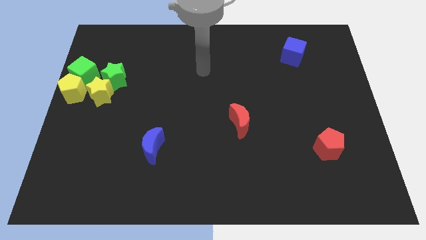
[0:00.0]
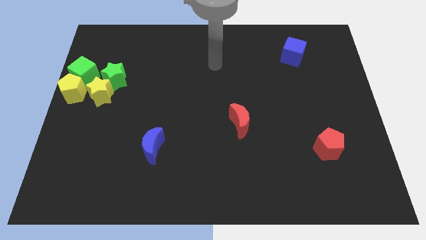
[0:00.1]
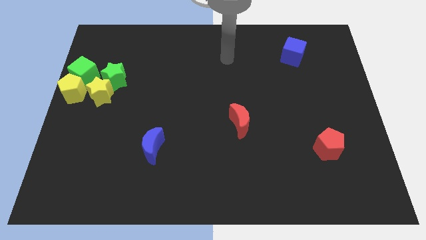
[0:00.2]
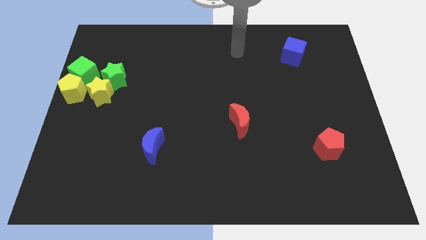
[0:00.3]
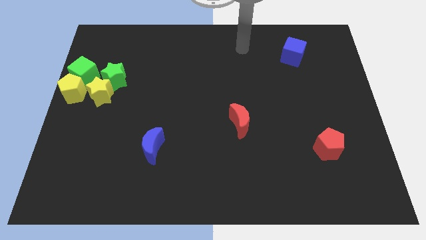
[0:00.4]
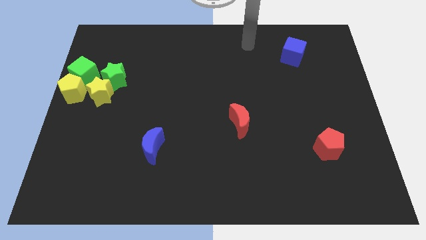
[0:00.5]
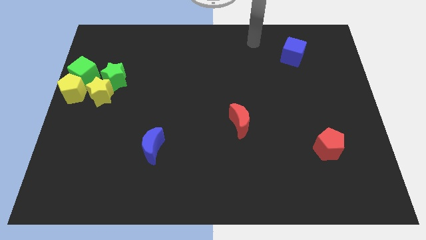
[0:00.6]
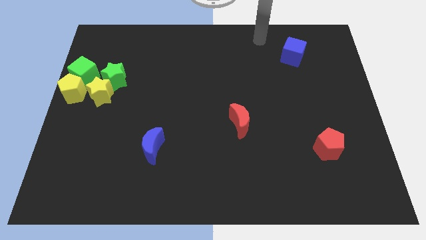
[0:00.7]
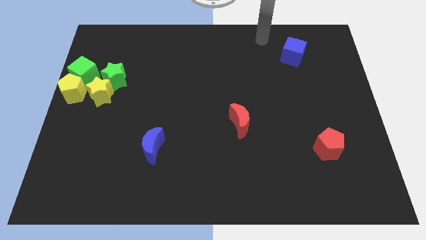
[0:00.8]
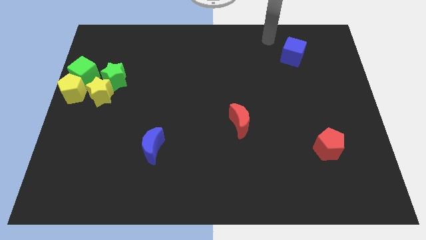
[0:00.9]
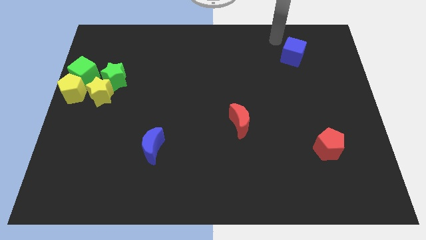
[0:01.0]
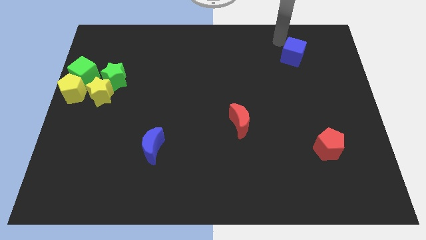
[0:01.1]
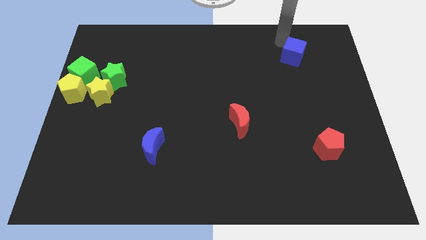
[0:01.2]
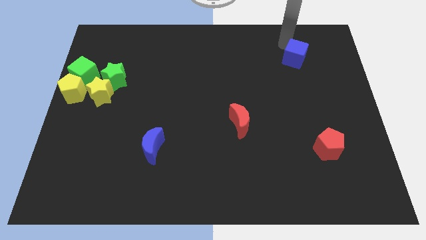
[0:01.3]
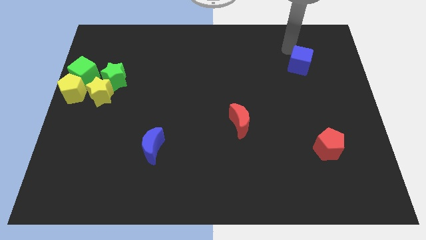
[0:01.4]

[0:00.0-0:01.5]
tab the top side of the blue cube

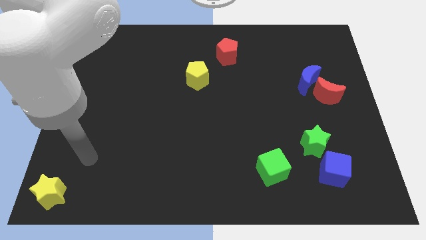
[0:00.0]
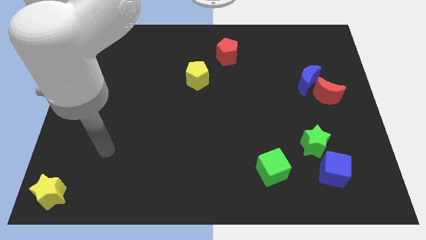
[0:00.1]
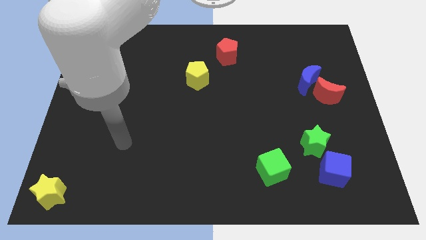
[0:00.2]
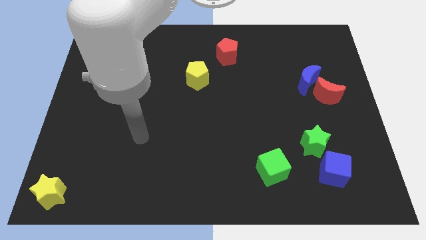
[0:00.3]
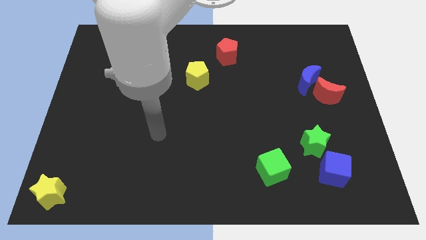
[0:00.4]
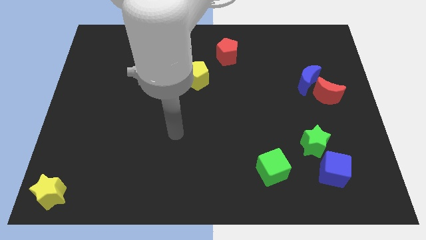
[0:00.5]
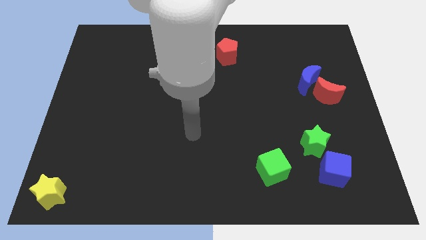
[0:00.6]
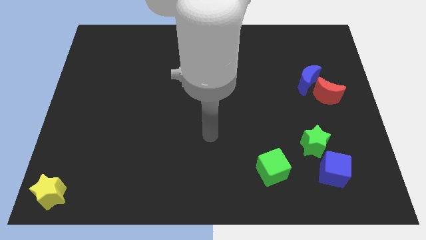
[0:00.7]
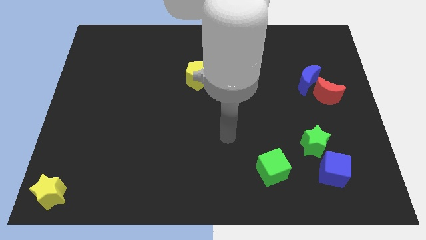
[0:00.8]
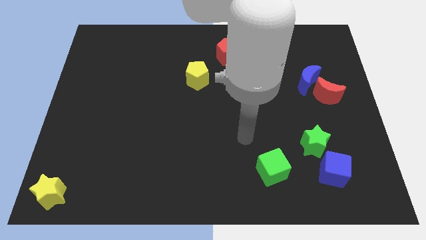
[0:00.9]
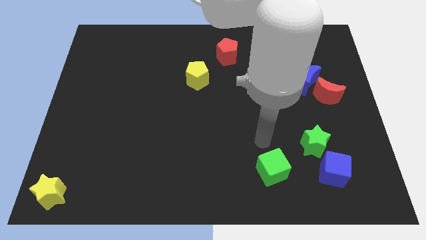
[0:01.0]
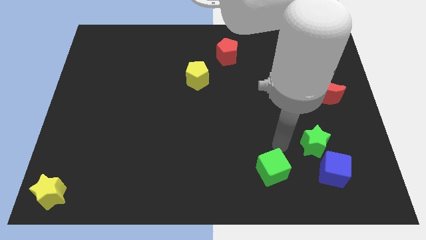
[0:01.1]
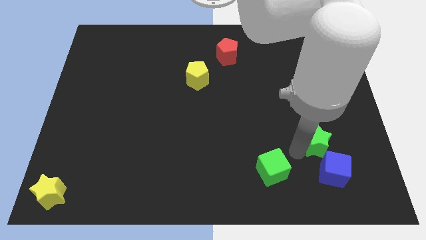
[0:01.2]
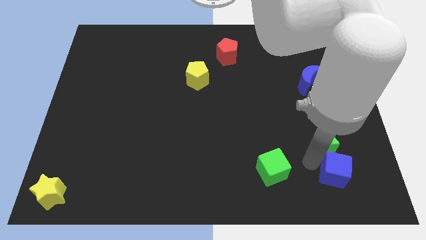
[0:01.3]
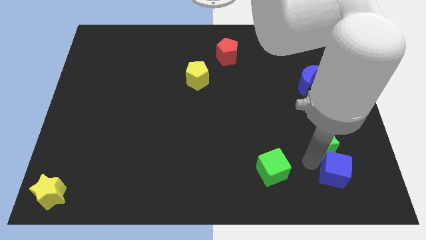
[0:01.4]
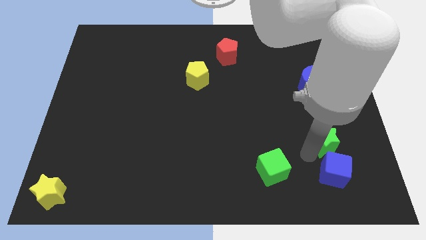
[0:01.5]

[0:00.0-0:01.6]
touch the left side of the green star

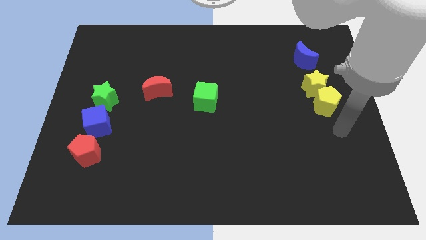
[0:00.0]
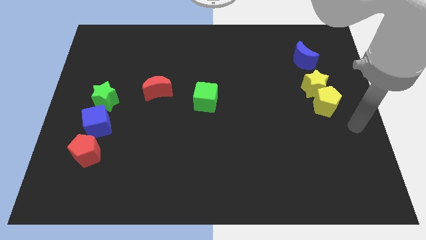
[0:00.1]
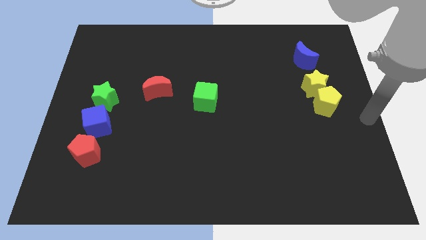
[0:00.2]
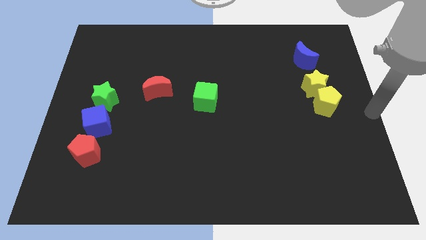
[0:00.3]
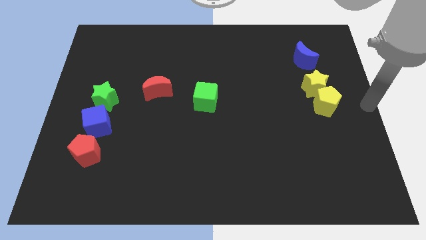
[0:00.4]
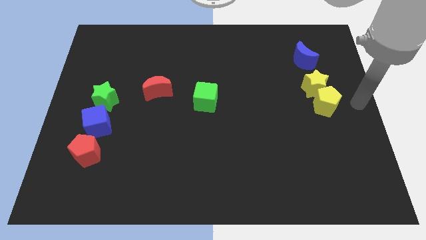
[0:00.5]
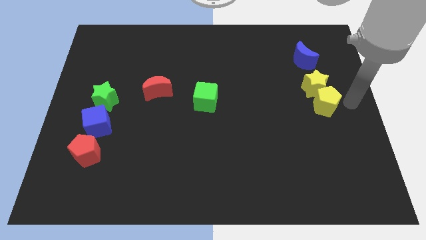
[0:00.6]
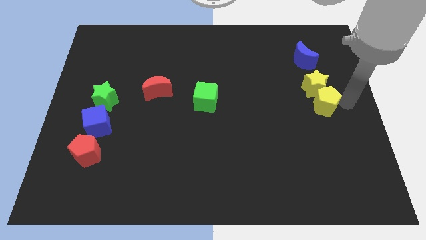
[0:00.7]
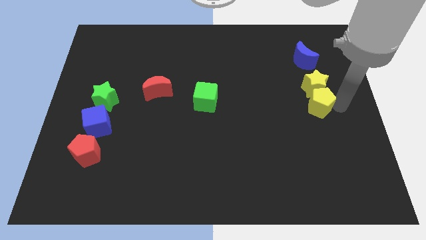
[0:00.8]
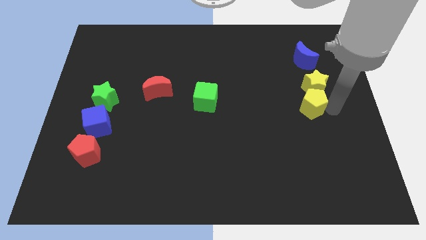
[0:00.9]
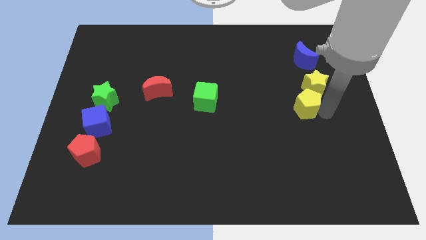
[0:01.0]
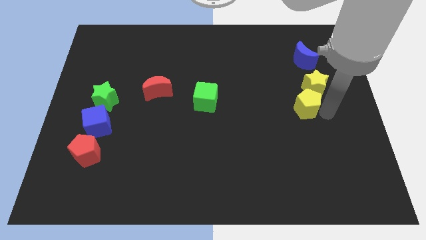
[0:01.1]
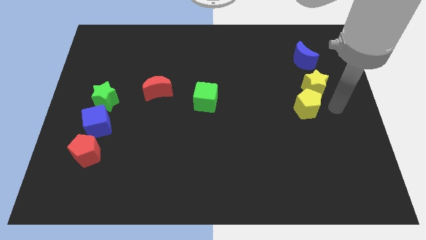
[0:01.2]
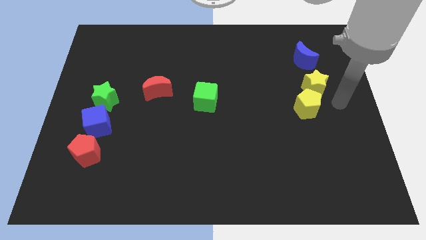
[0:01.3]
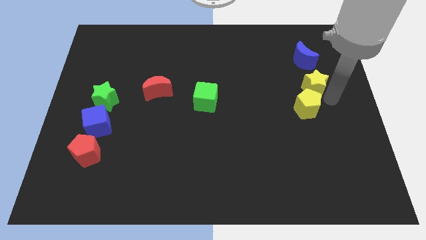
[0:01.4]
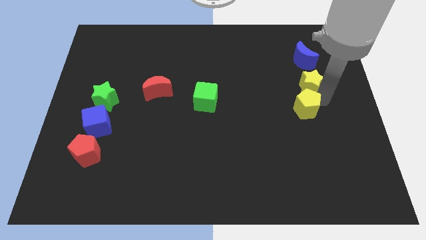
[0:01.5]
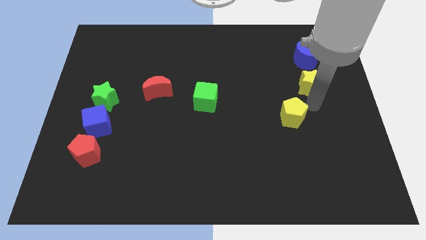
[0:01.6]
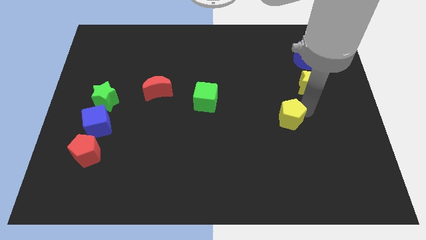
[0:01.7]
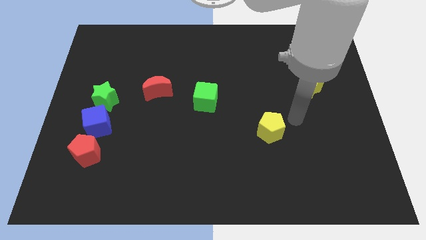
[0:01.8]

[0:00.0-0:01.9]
separate yellow pentagon from from star

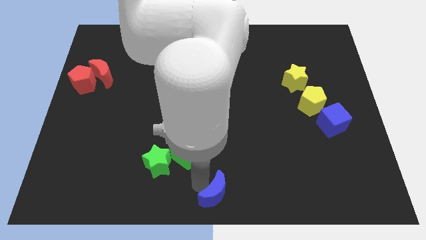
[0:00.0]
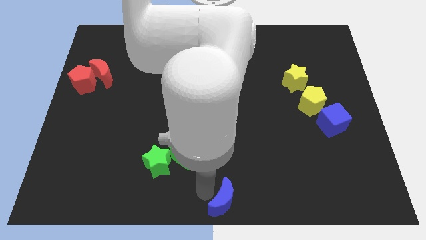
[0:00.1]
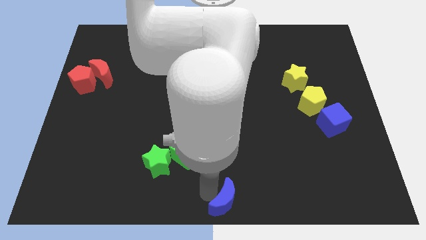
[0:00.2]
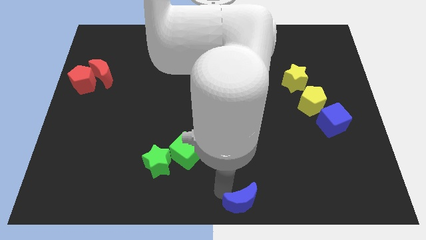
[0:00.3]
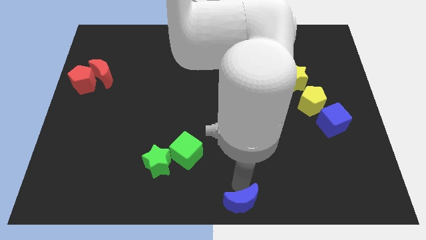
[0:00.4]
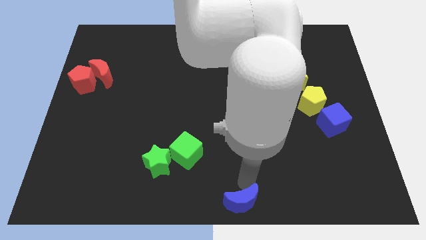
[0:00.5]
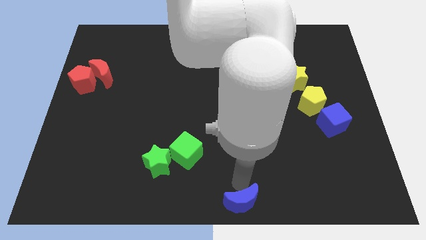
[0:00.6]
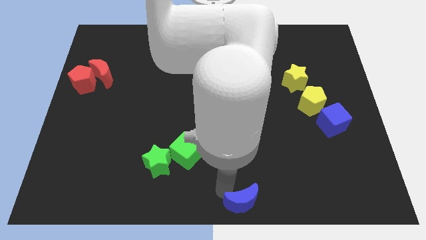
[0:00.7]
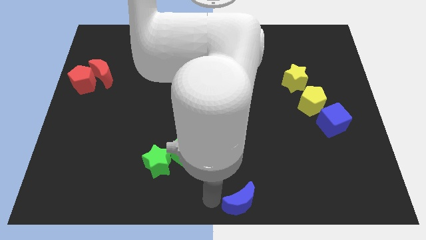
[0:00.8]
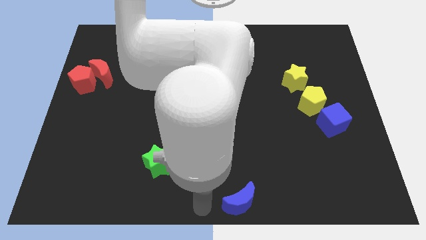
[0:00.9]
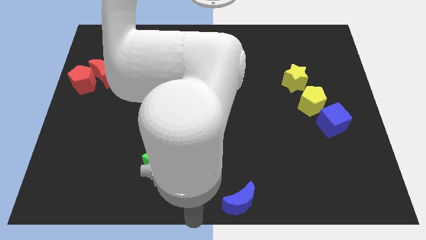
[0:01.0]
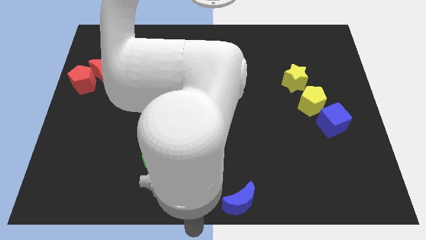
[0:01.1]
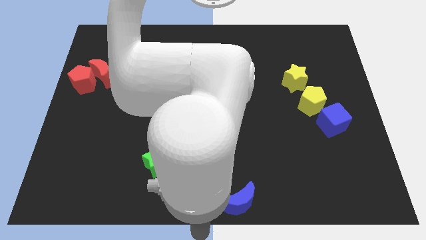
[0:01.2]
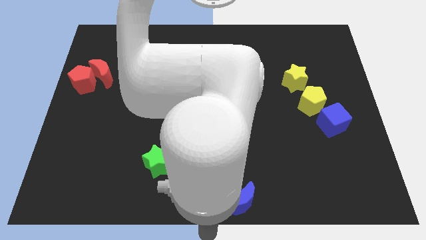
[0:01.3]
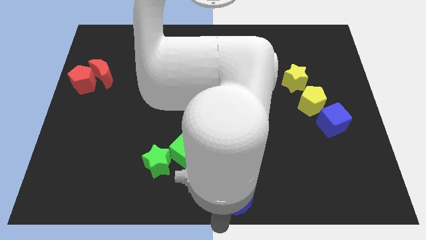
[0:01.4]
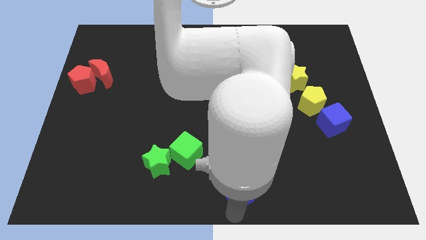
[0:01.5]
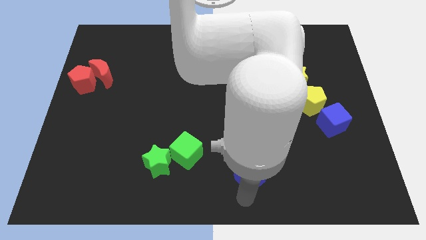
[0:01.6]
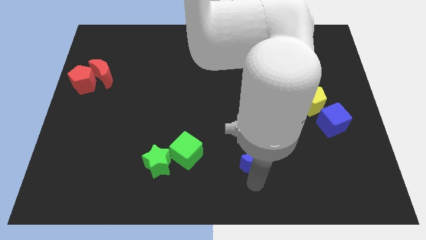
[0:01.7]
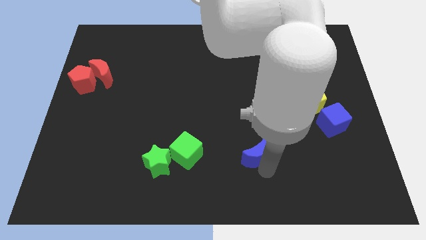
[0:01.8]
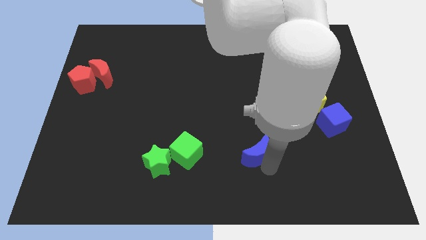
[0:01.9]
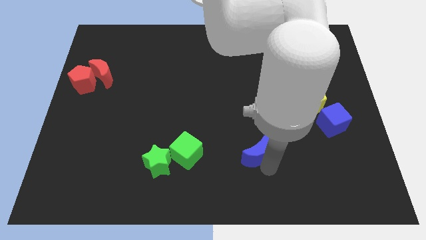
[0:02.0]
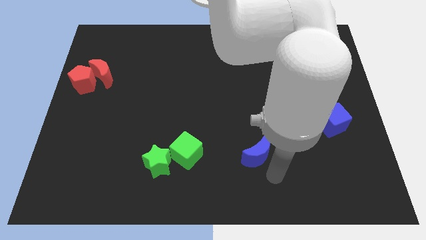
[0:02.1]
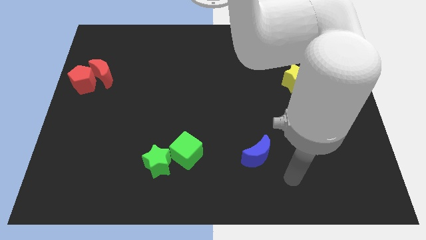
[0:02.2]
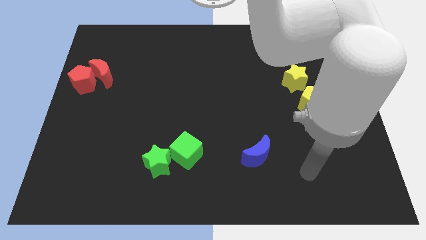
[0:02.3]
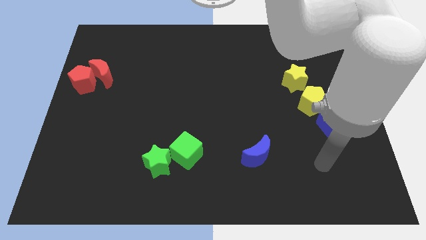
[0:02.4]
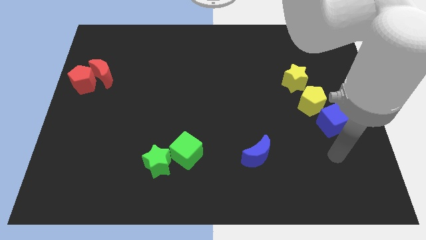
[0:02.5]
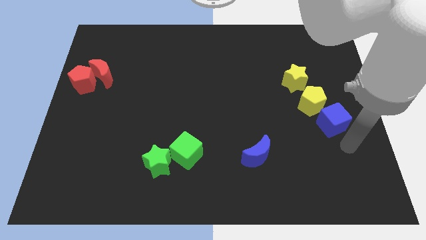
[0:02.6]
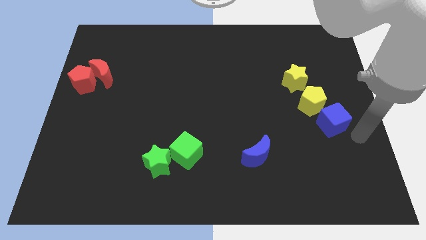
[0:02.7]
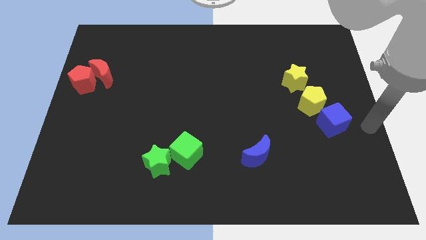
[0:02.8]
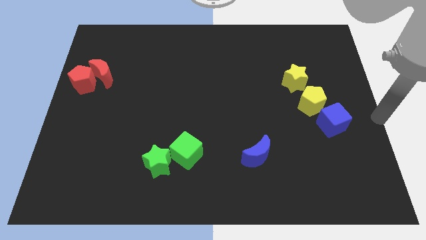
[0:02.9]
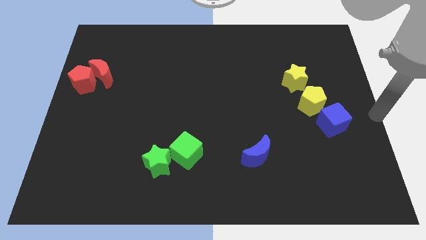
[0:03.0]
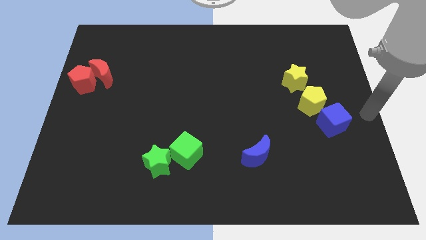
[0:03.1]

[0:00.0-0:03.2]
place the blue crescent to the right of the green cube

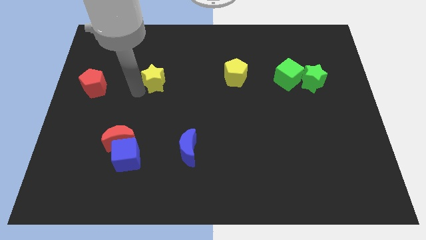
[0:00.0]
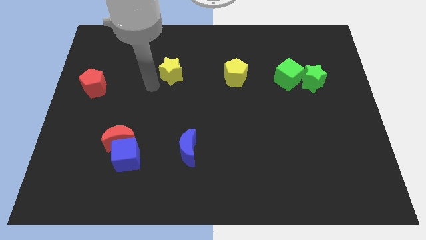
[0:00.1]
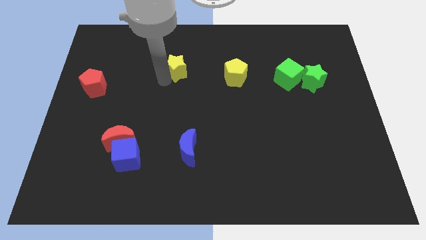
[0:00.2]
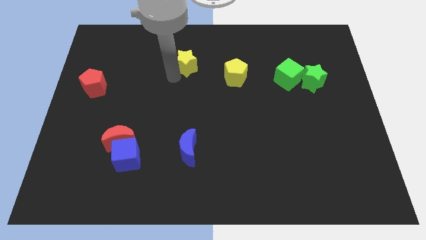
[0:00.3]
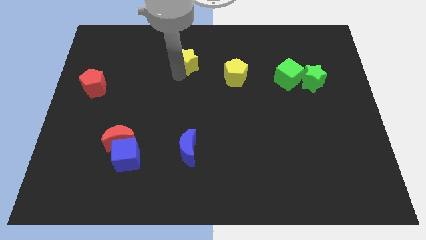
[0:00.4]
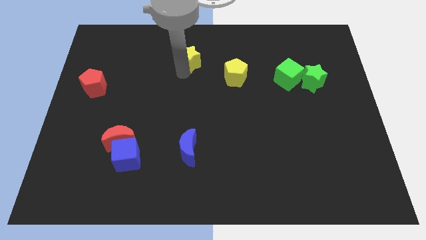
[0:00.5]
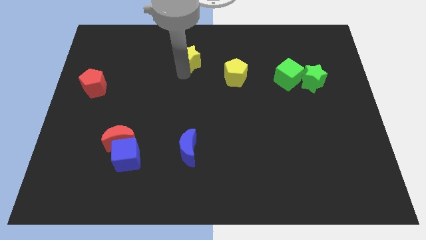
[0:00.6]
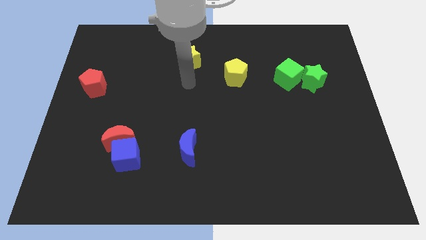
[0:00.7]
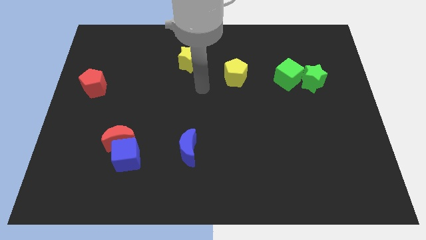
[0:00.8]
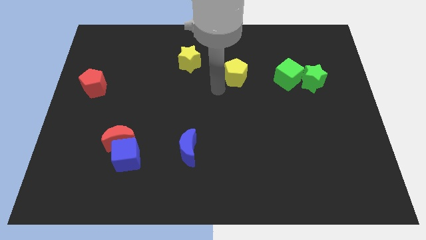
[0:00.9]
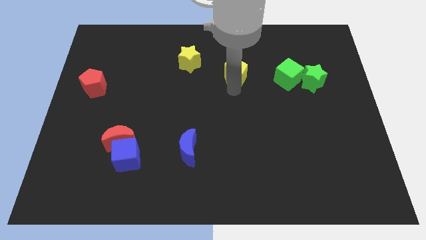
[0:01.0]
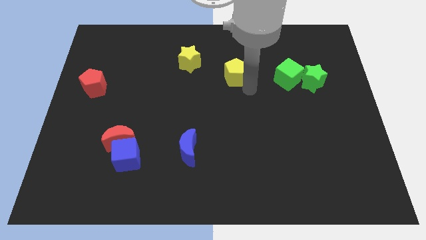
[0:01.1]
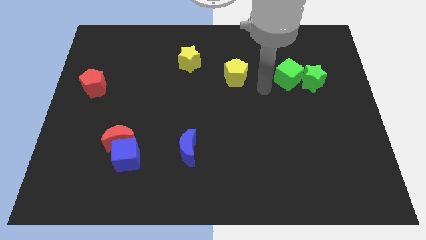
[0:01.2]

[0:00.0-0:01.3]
push the yellow star diagonally top left to the yellow pentagon
